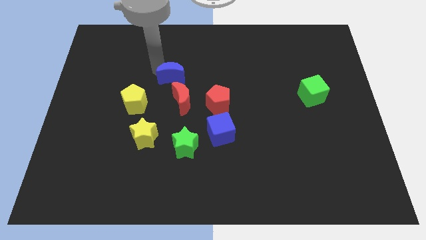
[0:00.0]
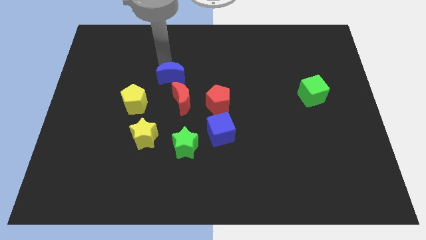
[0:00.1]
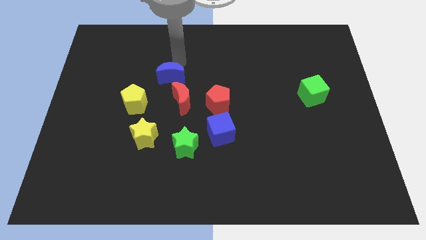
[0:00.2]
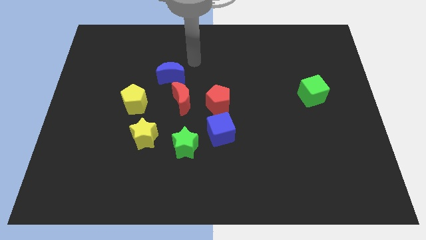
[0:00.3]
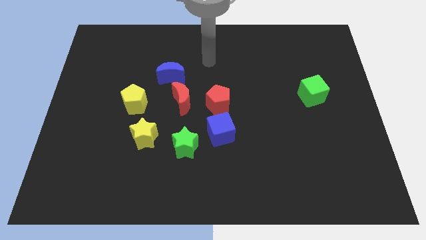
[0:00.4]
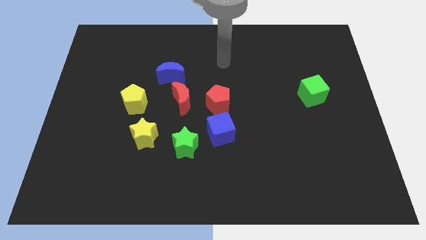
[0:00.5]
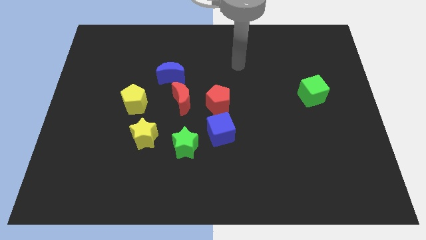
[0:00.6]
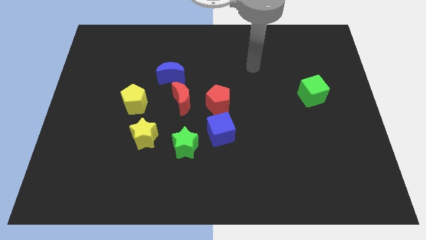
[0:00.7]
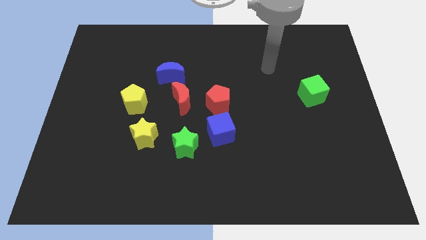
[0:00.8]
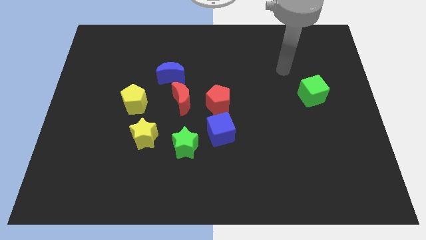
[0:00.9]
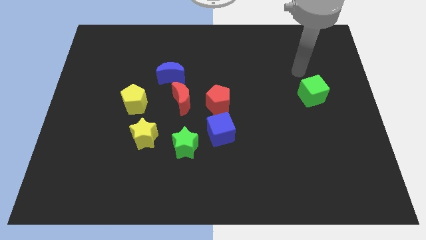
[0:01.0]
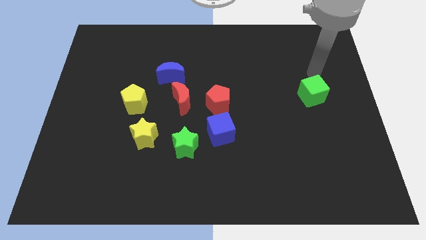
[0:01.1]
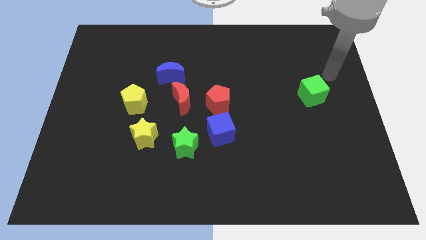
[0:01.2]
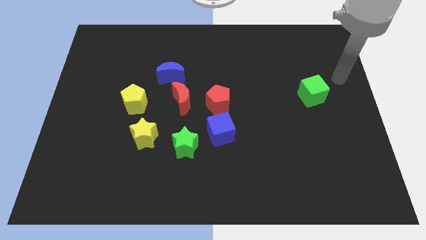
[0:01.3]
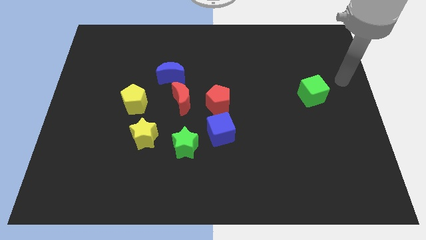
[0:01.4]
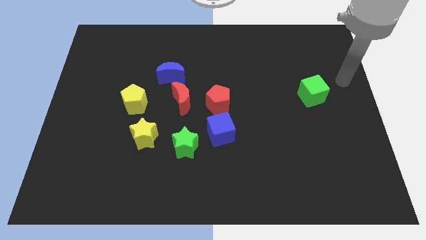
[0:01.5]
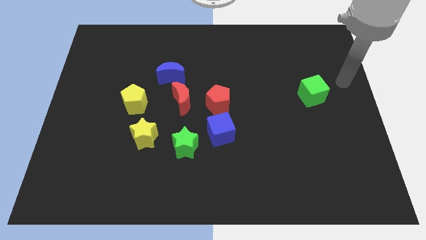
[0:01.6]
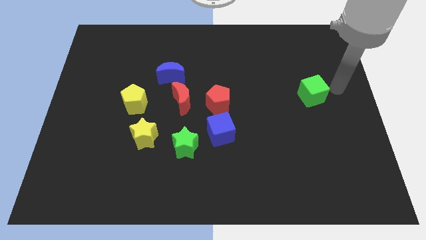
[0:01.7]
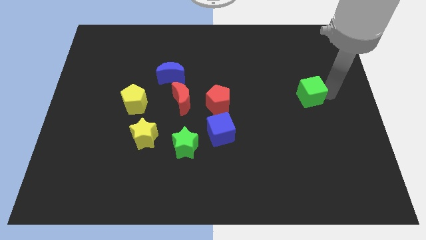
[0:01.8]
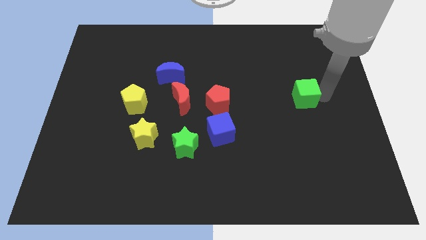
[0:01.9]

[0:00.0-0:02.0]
place the arm right to the green cube

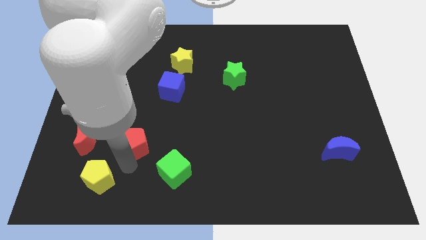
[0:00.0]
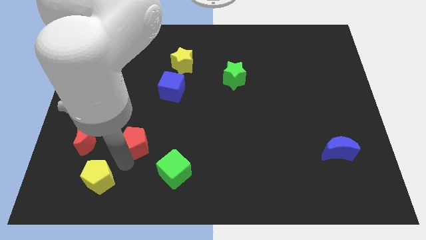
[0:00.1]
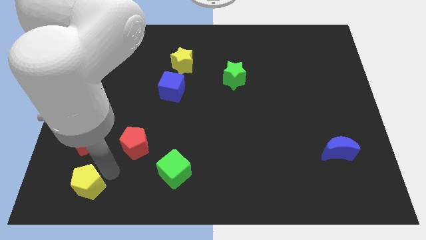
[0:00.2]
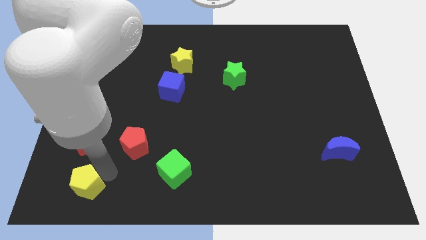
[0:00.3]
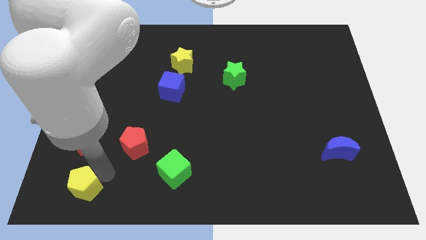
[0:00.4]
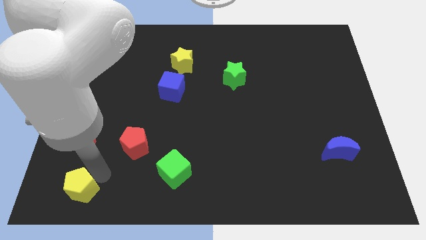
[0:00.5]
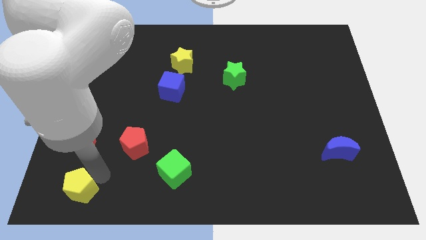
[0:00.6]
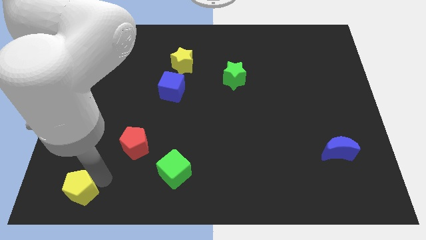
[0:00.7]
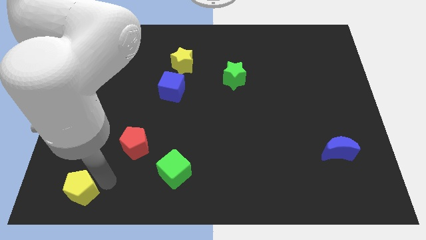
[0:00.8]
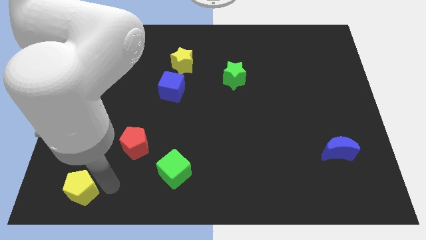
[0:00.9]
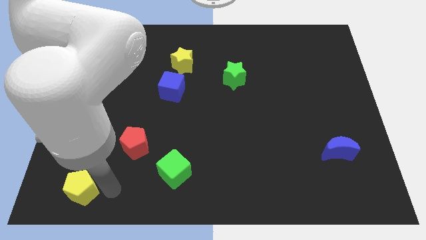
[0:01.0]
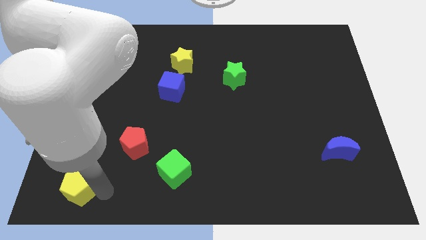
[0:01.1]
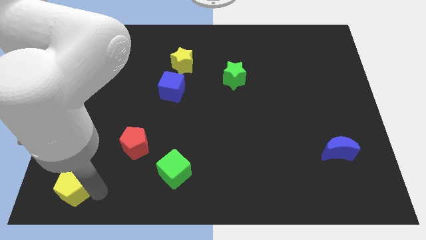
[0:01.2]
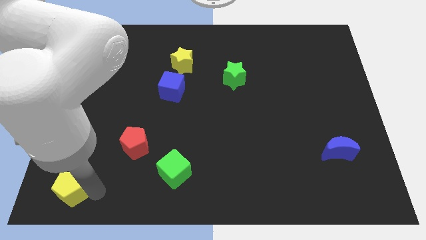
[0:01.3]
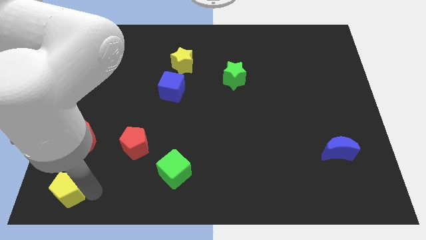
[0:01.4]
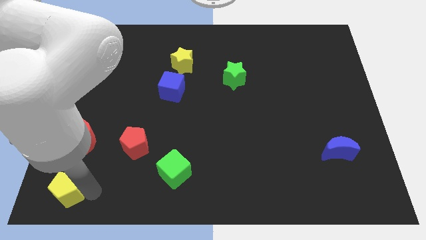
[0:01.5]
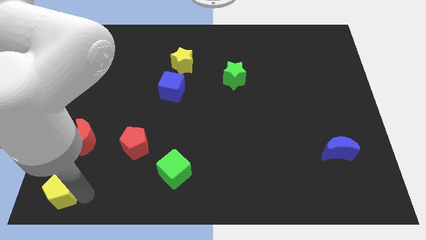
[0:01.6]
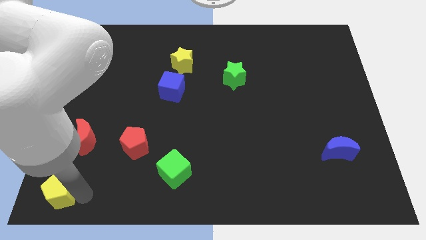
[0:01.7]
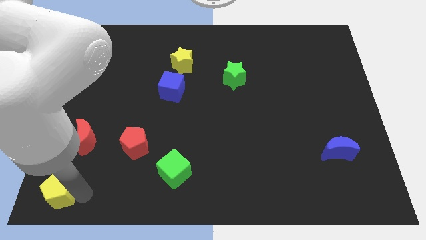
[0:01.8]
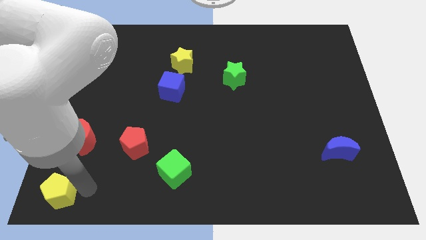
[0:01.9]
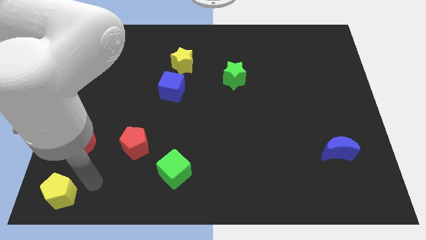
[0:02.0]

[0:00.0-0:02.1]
push the yellow pentagon below red moon

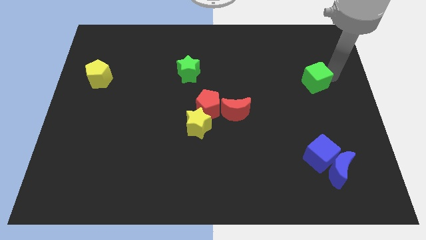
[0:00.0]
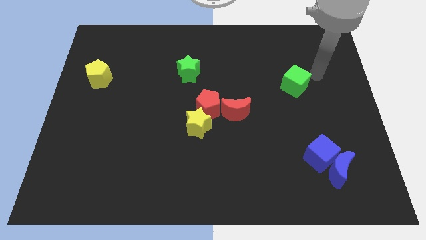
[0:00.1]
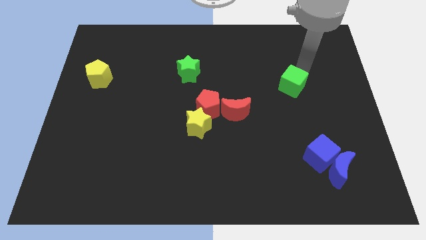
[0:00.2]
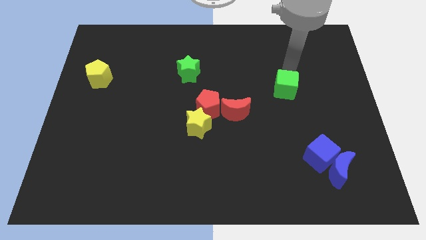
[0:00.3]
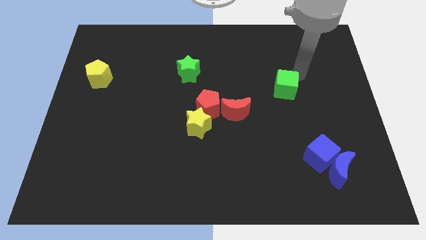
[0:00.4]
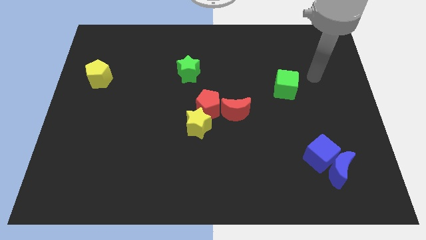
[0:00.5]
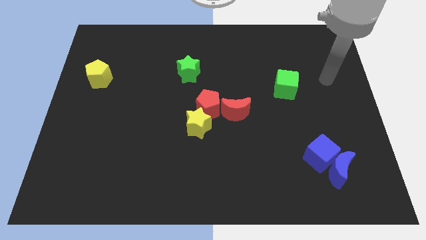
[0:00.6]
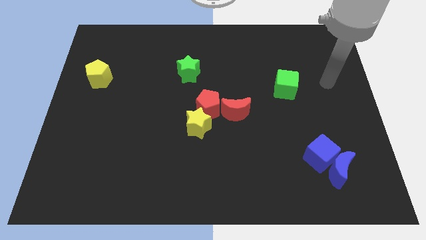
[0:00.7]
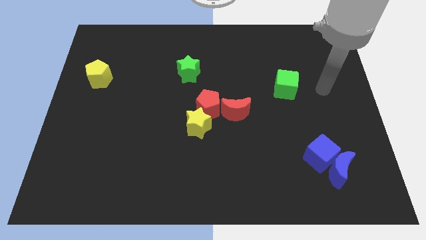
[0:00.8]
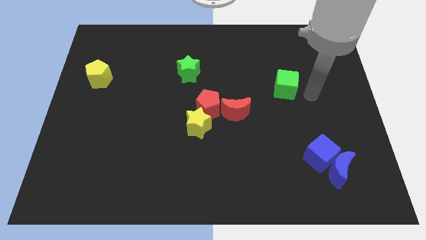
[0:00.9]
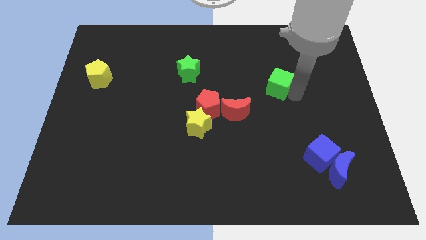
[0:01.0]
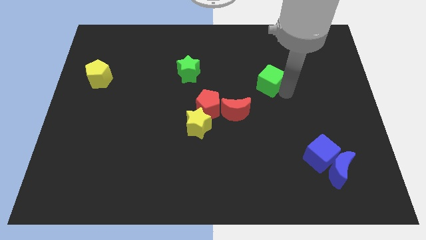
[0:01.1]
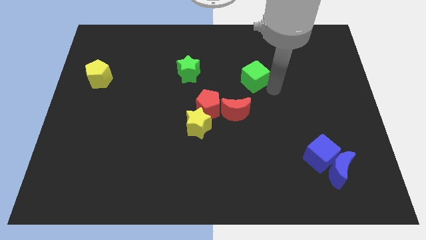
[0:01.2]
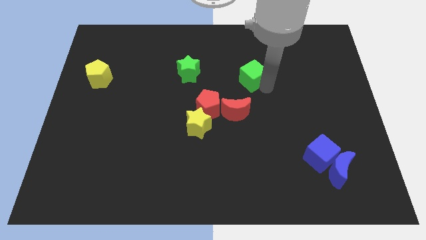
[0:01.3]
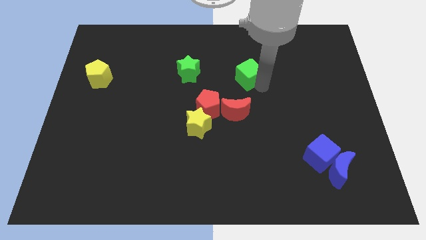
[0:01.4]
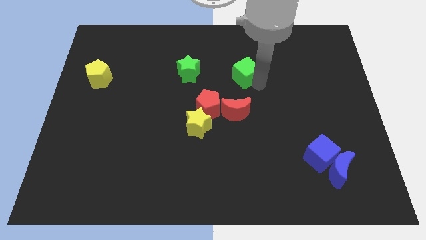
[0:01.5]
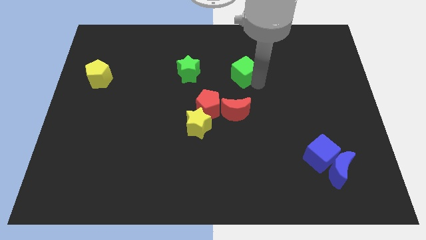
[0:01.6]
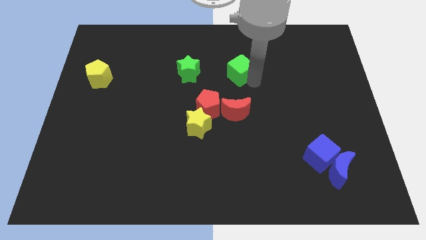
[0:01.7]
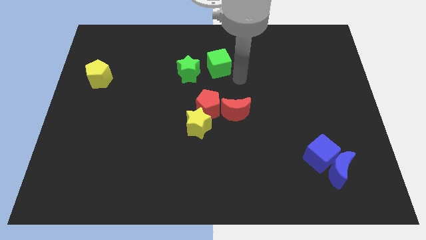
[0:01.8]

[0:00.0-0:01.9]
put the green cube at the top of red moon

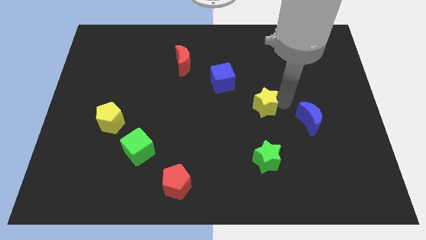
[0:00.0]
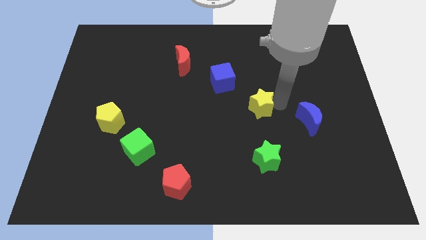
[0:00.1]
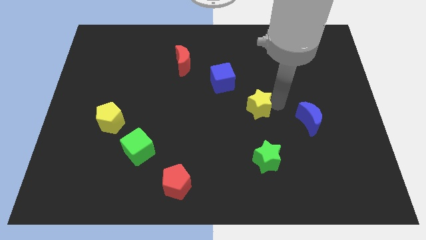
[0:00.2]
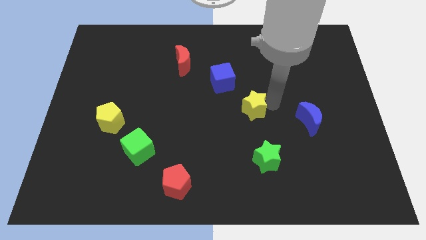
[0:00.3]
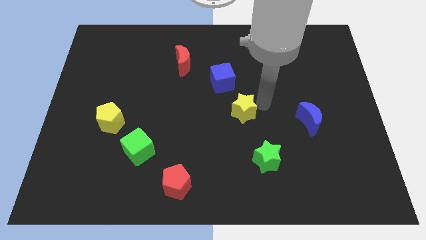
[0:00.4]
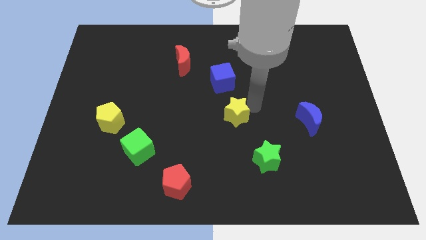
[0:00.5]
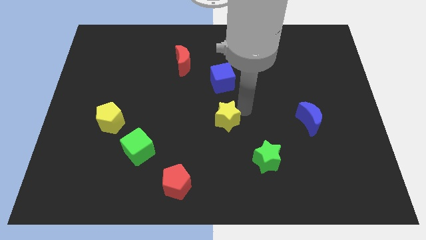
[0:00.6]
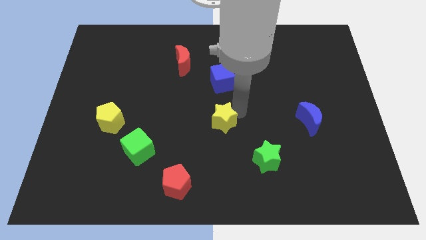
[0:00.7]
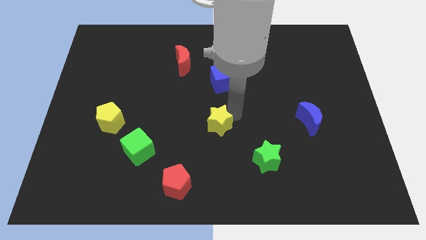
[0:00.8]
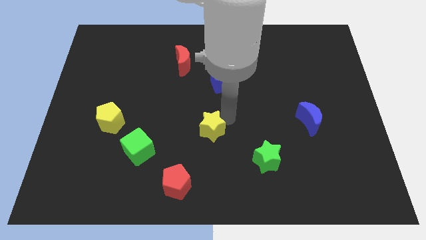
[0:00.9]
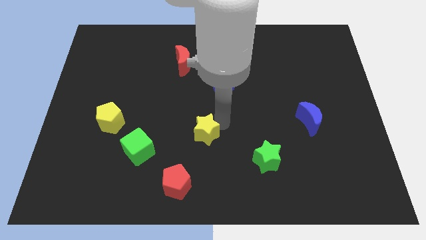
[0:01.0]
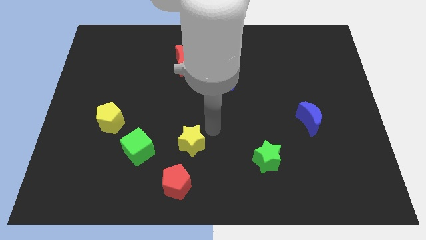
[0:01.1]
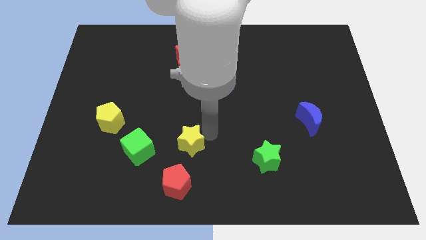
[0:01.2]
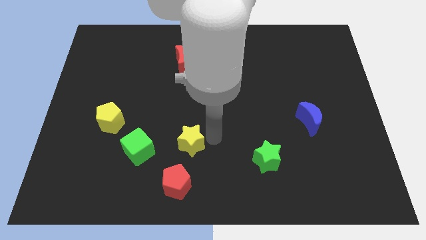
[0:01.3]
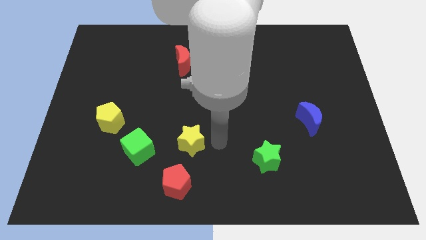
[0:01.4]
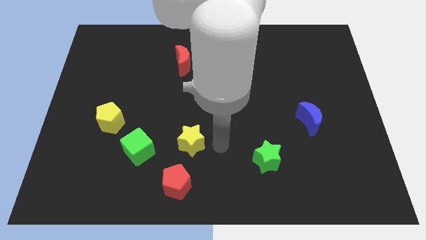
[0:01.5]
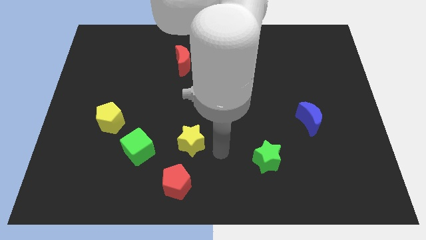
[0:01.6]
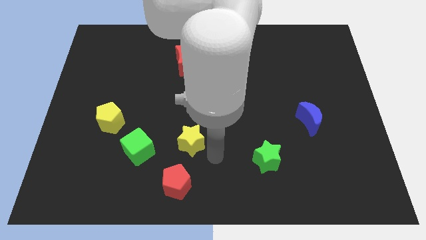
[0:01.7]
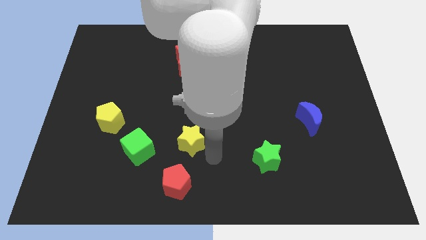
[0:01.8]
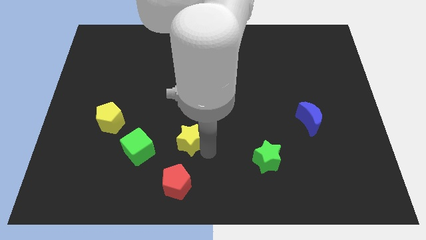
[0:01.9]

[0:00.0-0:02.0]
move the yellow star towards the red pentagon

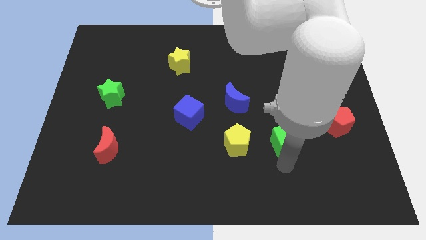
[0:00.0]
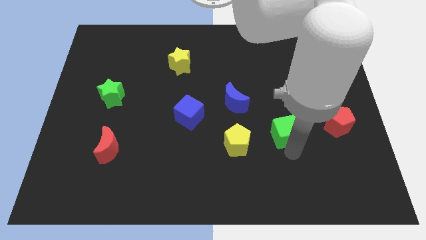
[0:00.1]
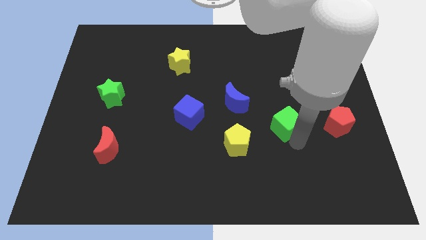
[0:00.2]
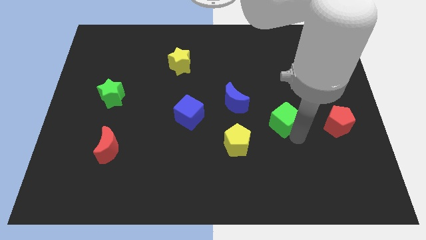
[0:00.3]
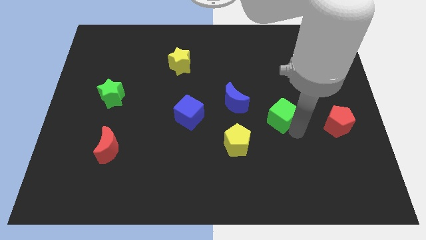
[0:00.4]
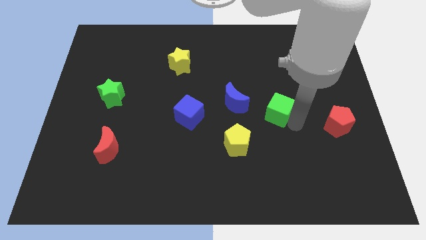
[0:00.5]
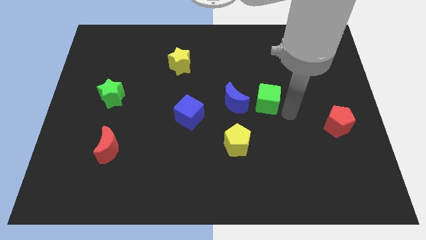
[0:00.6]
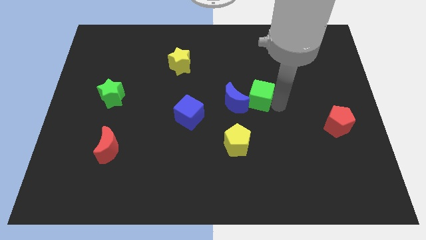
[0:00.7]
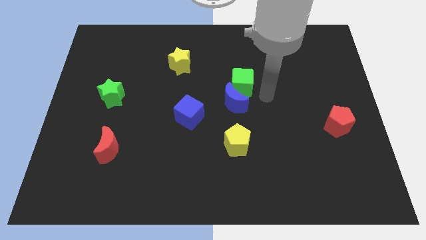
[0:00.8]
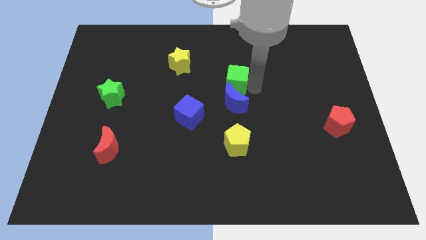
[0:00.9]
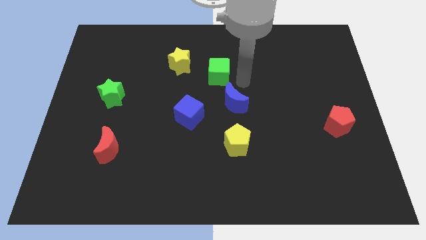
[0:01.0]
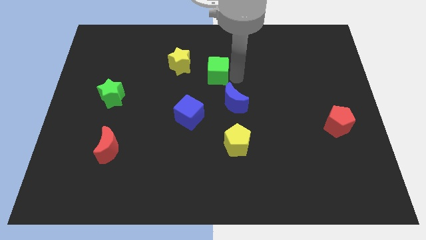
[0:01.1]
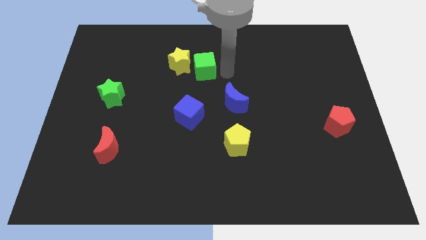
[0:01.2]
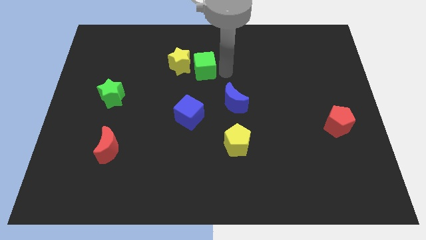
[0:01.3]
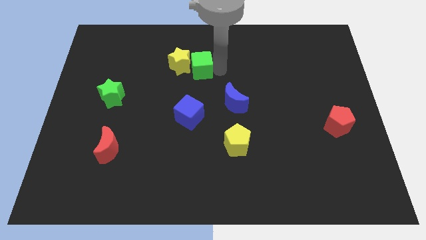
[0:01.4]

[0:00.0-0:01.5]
place the green cube right to the yellow star
